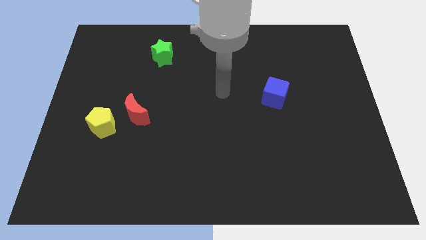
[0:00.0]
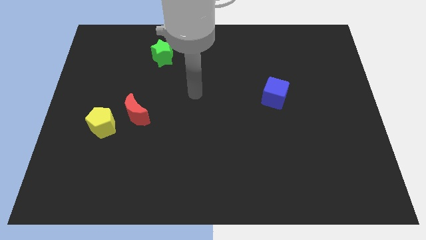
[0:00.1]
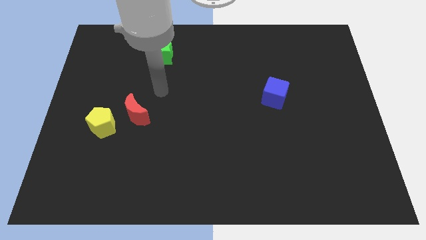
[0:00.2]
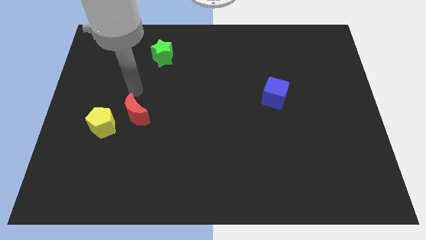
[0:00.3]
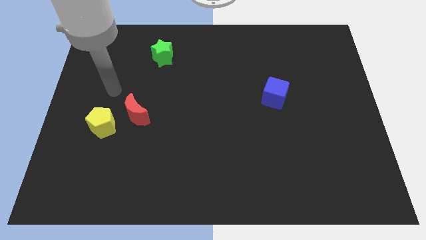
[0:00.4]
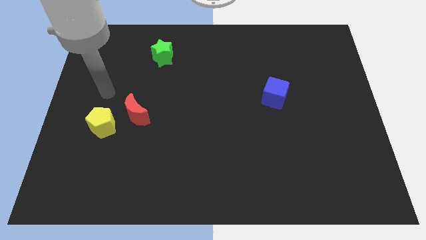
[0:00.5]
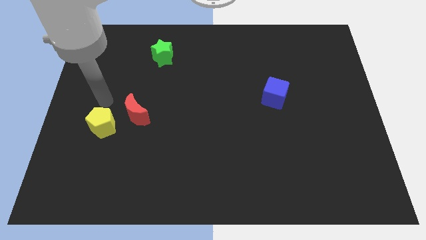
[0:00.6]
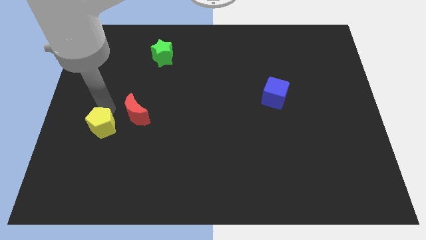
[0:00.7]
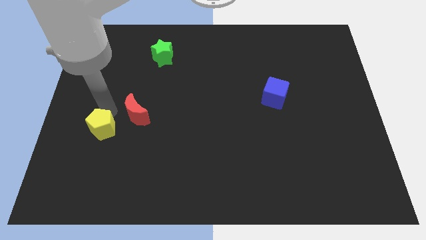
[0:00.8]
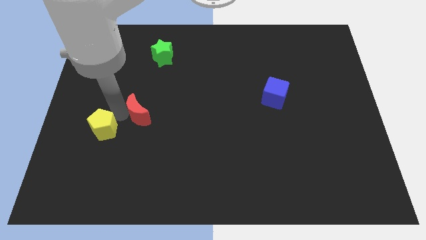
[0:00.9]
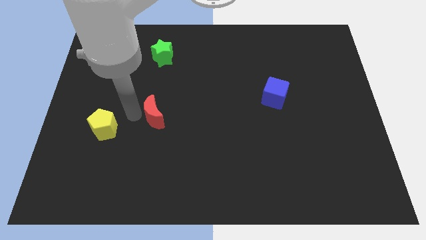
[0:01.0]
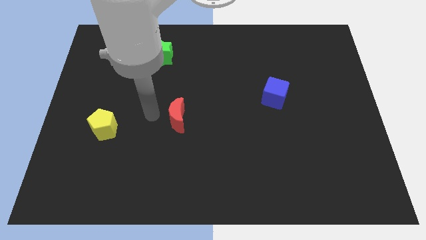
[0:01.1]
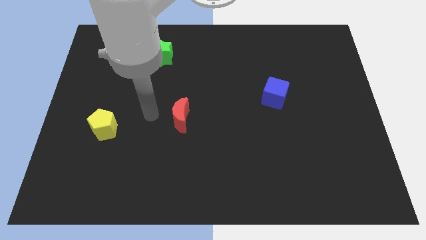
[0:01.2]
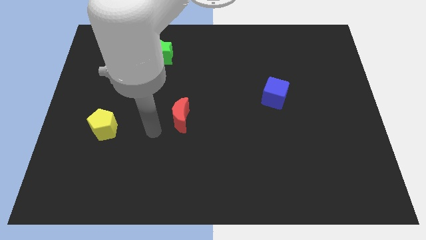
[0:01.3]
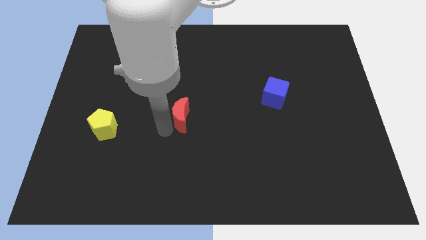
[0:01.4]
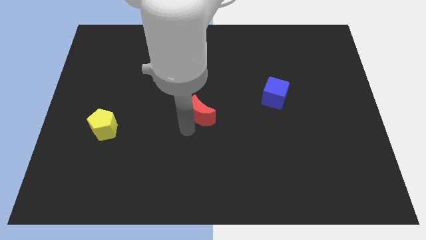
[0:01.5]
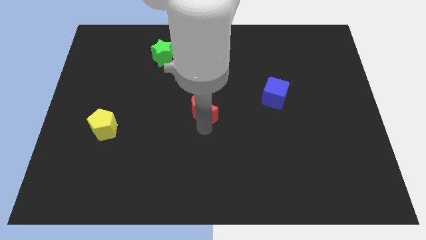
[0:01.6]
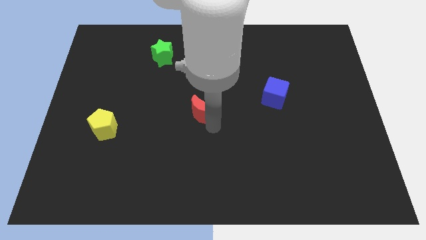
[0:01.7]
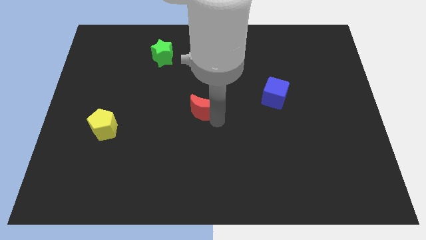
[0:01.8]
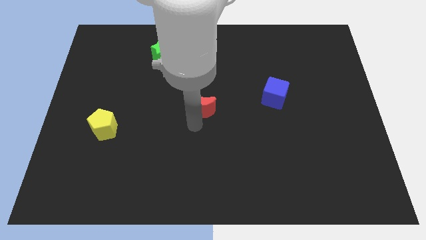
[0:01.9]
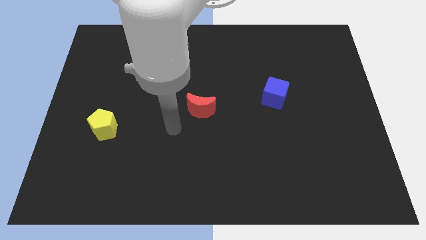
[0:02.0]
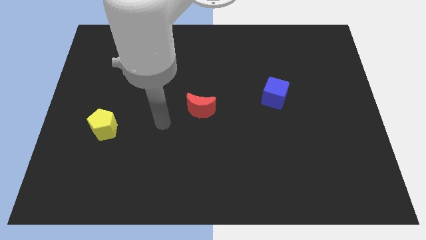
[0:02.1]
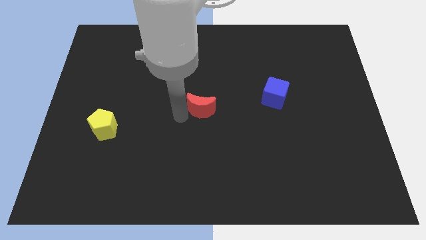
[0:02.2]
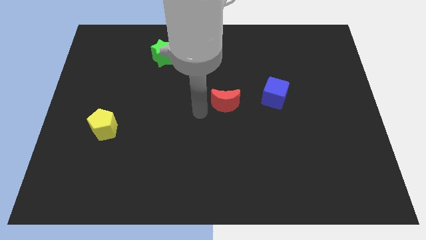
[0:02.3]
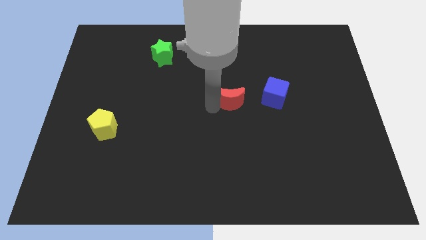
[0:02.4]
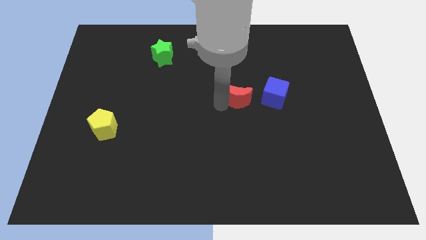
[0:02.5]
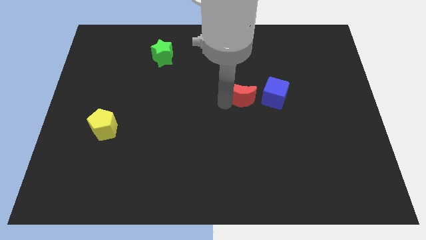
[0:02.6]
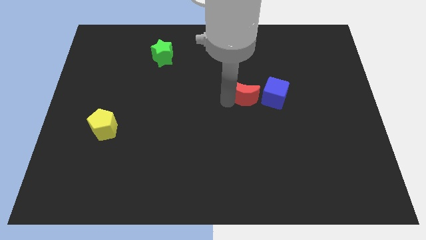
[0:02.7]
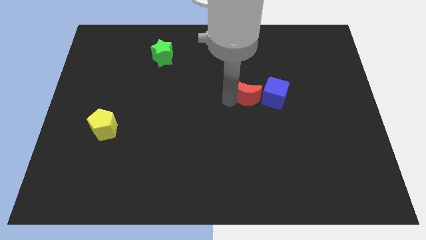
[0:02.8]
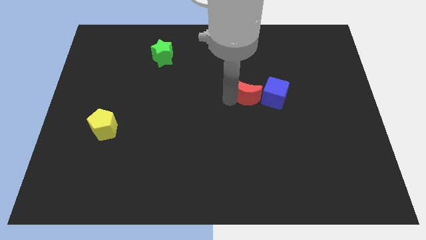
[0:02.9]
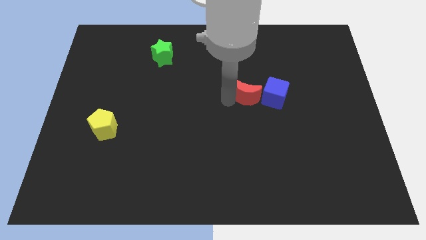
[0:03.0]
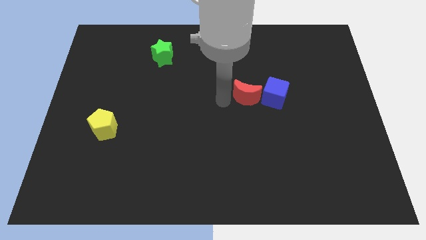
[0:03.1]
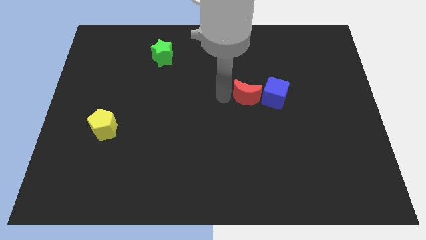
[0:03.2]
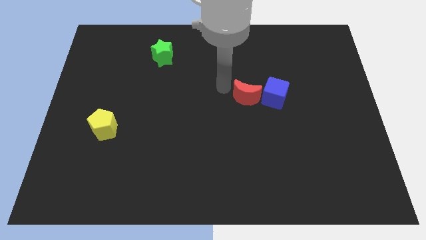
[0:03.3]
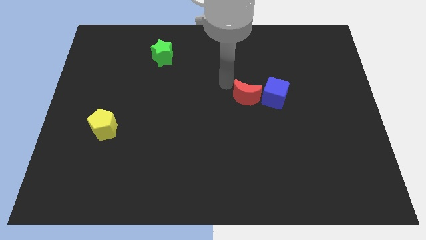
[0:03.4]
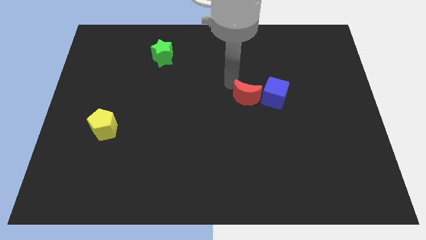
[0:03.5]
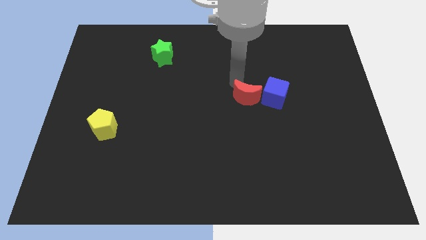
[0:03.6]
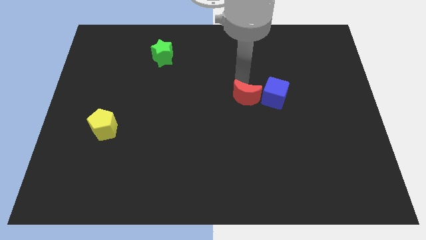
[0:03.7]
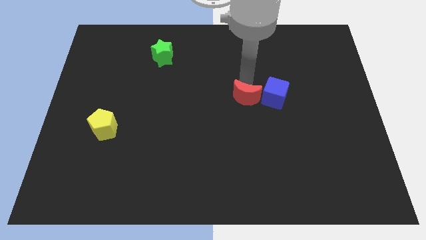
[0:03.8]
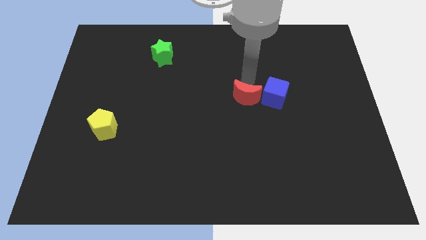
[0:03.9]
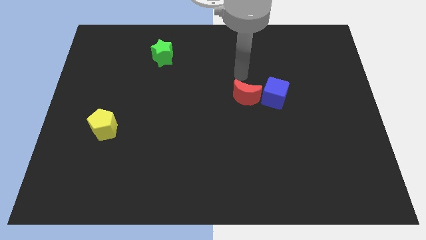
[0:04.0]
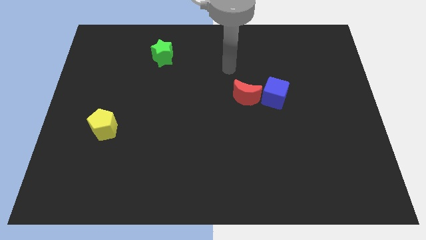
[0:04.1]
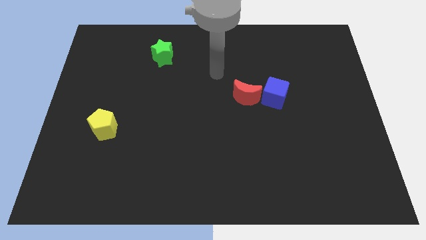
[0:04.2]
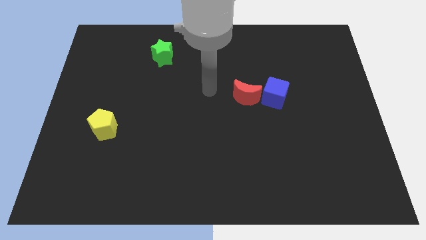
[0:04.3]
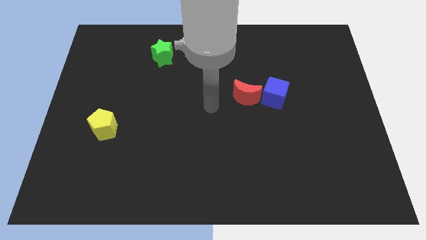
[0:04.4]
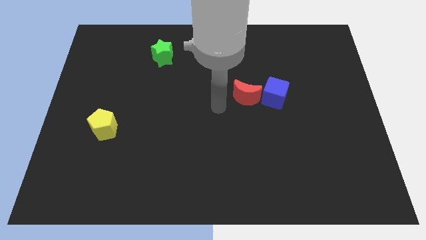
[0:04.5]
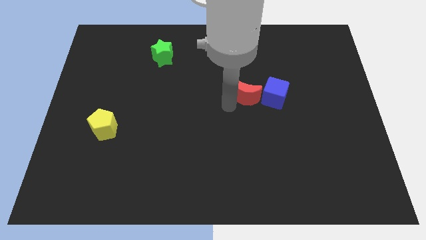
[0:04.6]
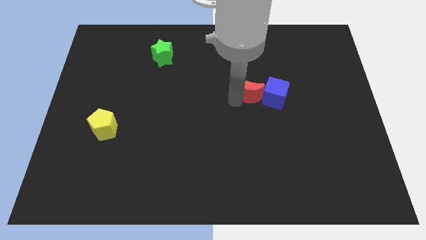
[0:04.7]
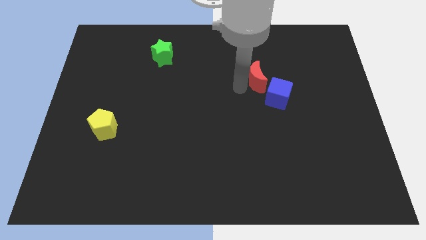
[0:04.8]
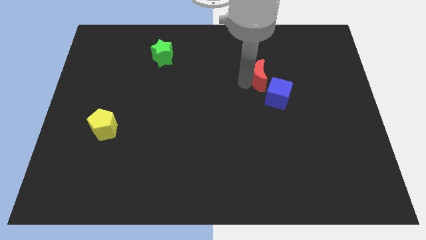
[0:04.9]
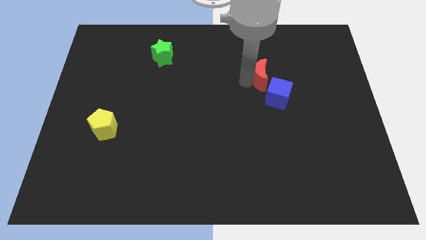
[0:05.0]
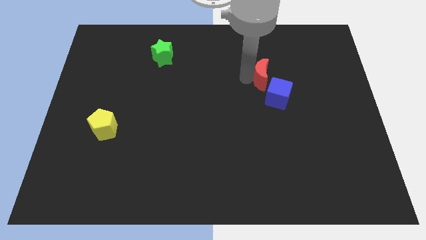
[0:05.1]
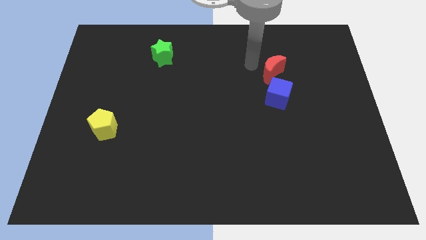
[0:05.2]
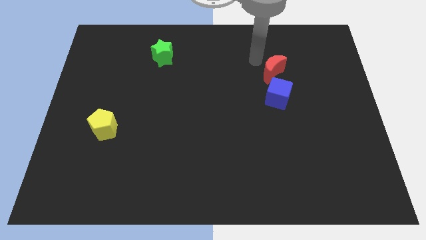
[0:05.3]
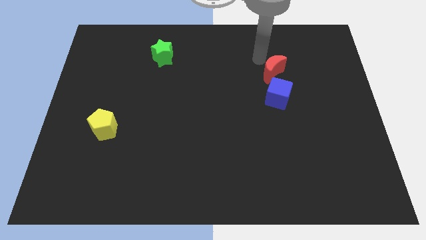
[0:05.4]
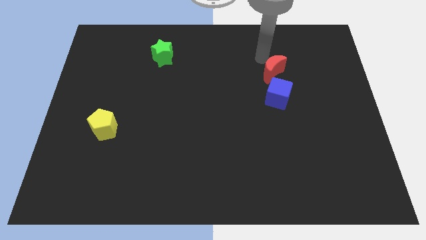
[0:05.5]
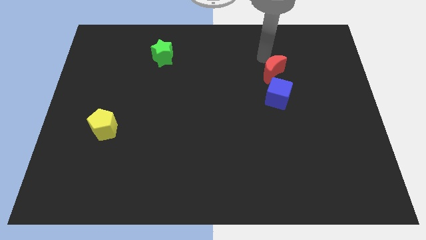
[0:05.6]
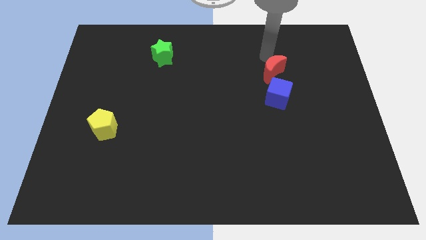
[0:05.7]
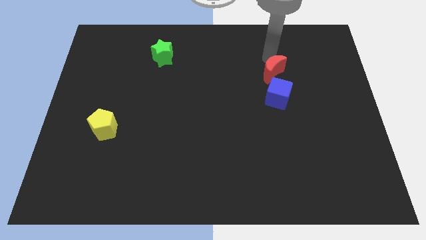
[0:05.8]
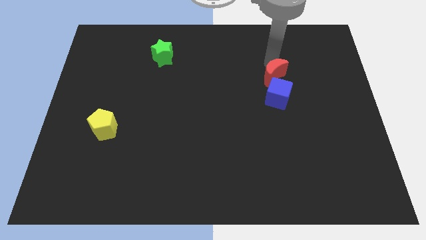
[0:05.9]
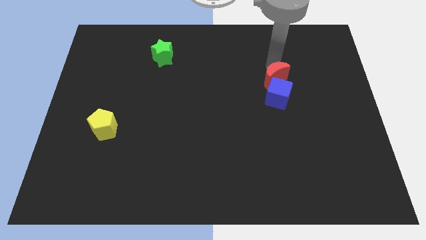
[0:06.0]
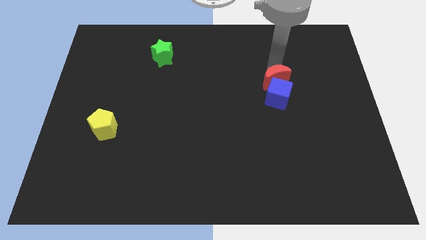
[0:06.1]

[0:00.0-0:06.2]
slide the moon close to the cube

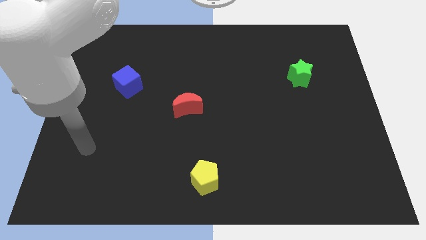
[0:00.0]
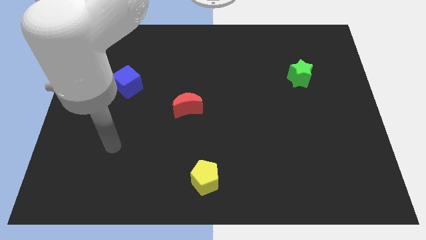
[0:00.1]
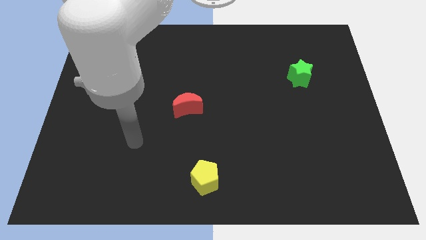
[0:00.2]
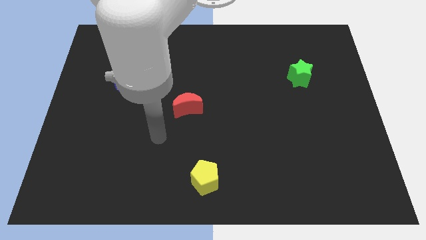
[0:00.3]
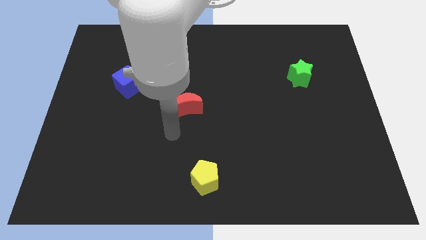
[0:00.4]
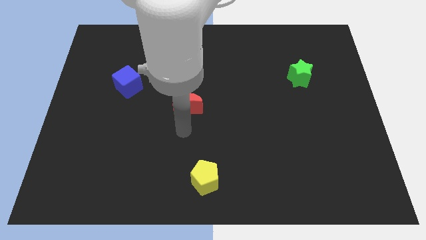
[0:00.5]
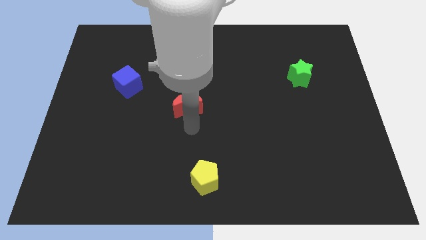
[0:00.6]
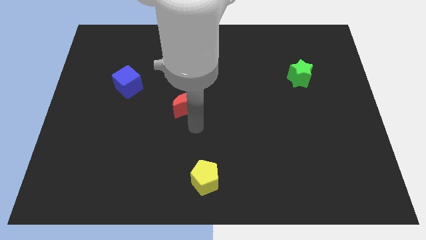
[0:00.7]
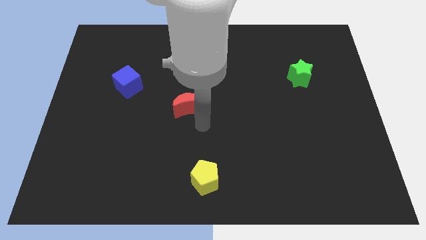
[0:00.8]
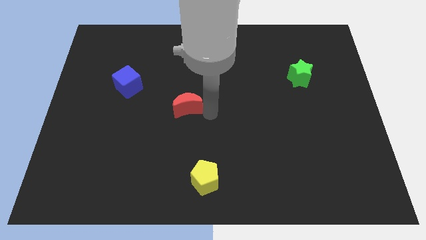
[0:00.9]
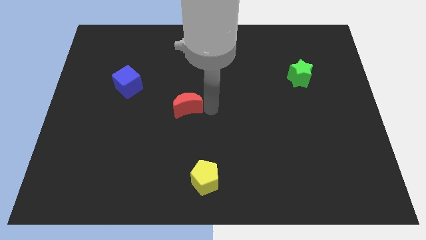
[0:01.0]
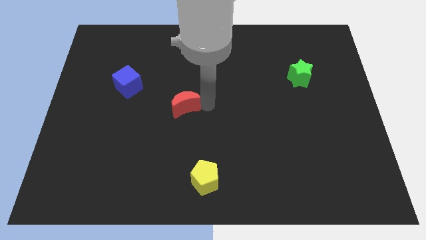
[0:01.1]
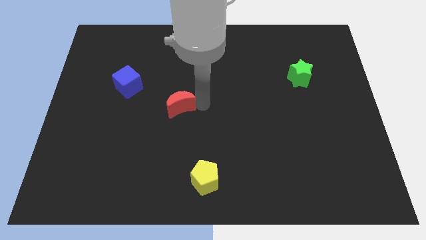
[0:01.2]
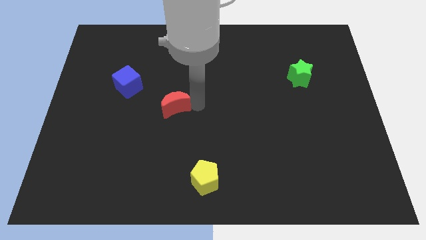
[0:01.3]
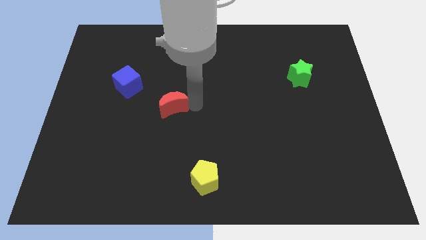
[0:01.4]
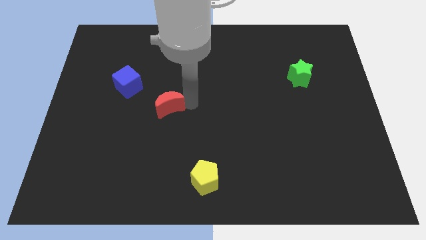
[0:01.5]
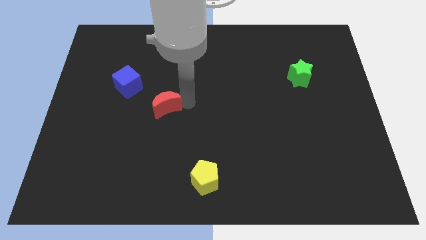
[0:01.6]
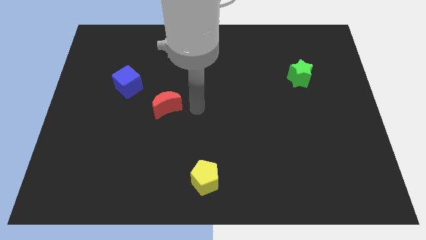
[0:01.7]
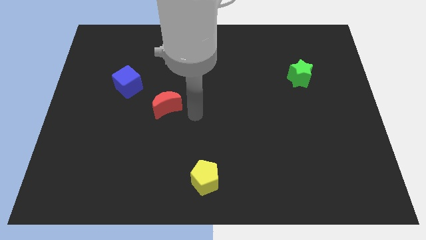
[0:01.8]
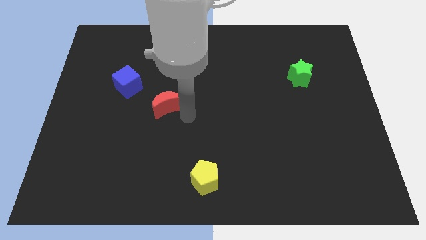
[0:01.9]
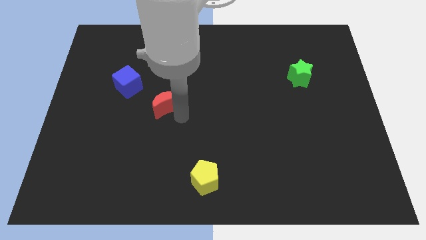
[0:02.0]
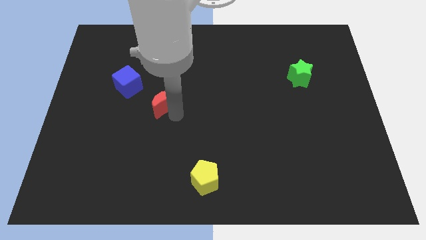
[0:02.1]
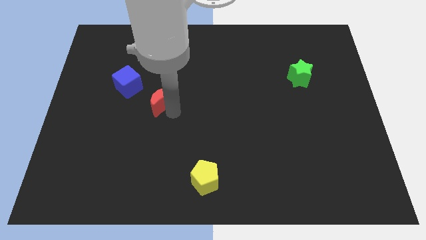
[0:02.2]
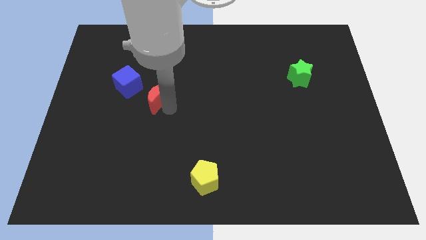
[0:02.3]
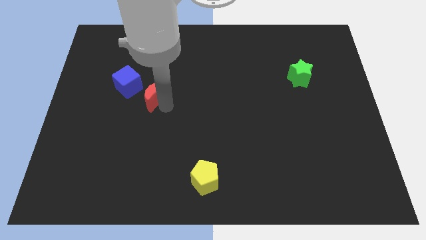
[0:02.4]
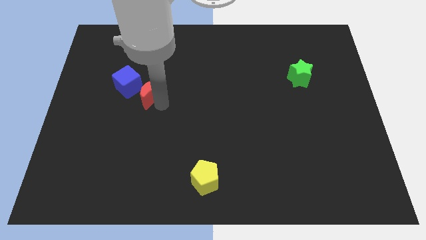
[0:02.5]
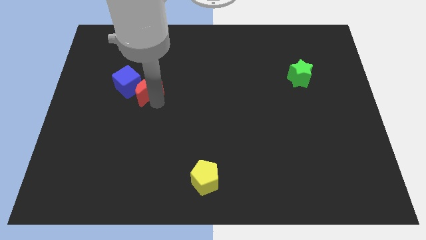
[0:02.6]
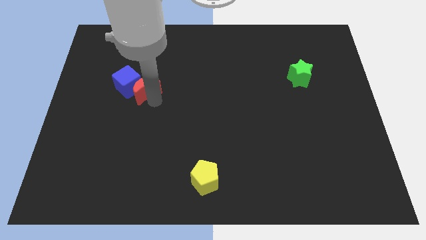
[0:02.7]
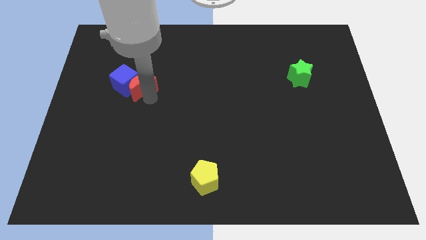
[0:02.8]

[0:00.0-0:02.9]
move the red moon to the blue cube
